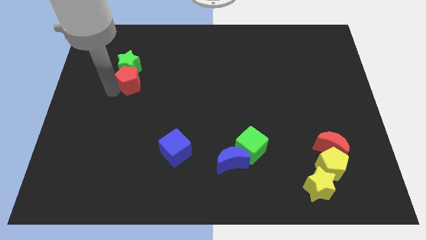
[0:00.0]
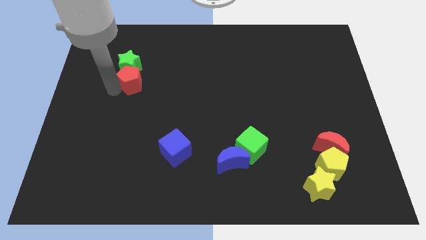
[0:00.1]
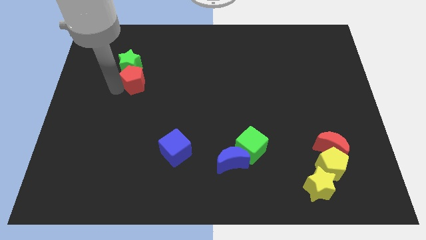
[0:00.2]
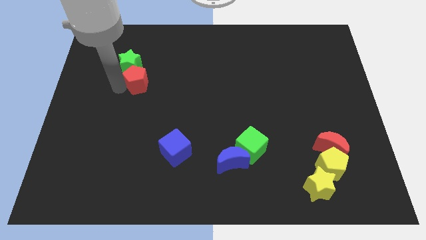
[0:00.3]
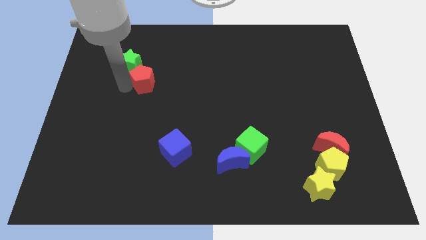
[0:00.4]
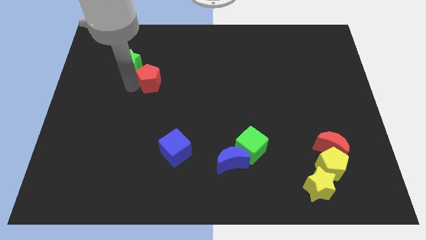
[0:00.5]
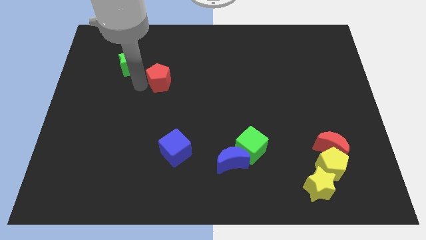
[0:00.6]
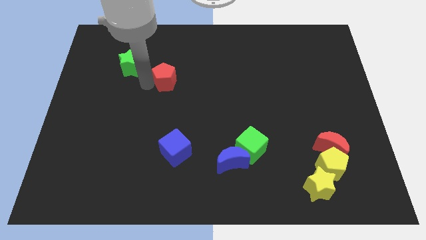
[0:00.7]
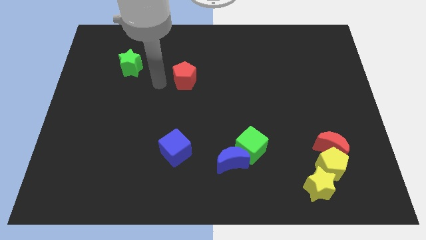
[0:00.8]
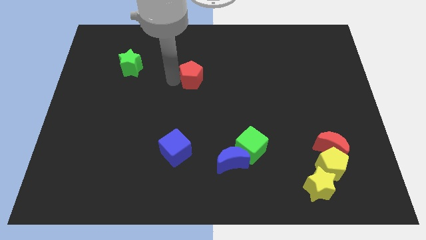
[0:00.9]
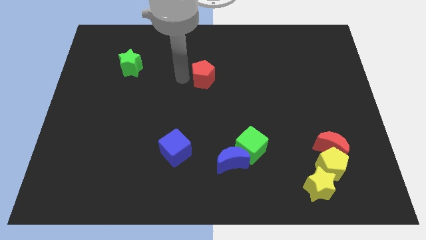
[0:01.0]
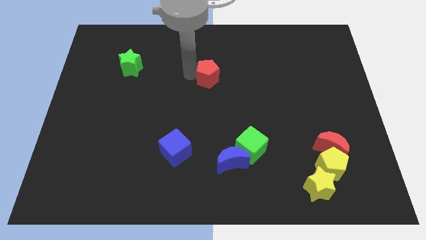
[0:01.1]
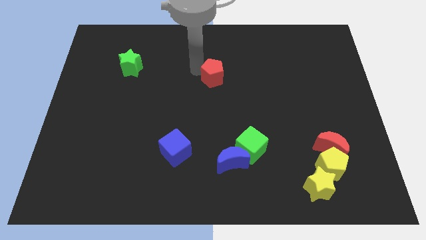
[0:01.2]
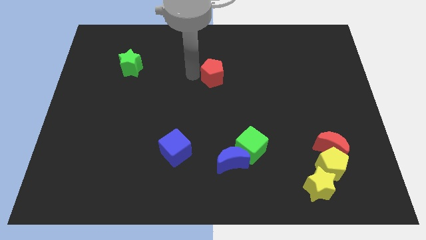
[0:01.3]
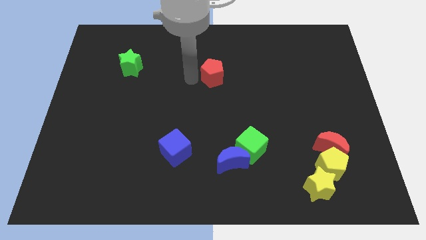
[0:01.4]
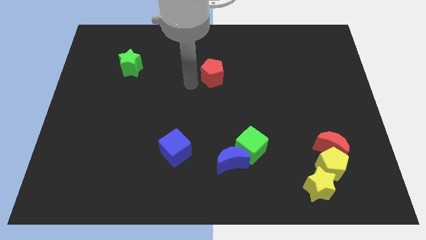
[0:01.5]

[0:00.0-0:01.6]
place the red pentagon to the center of the board

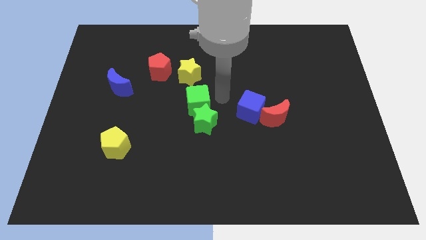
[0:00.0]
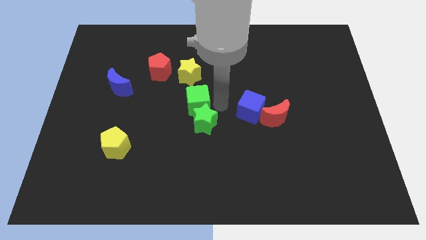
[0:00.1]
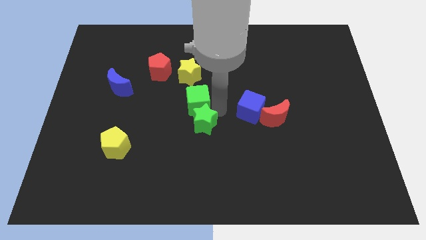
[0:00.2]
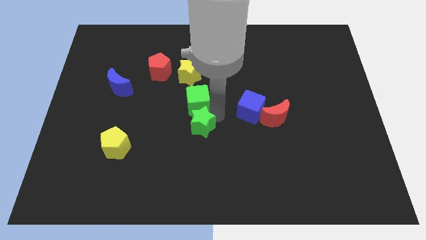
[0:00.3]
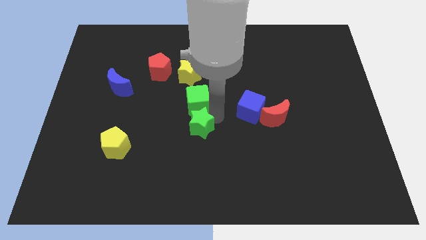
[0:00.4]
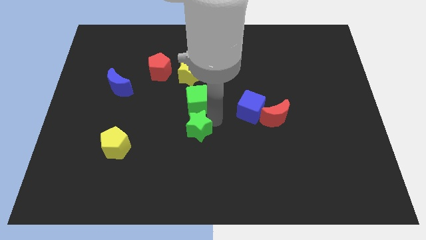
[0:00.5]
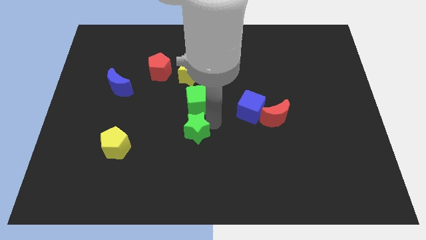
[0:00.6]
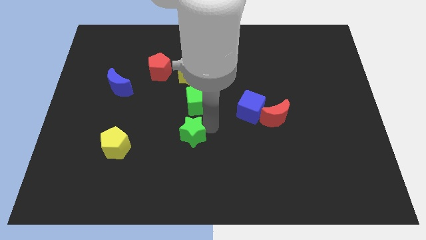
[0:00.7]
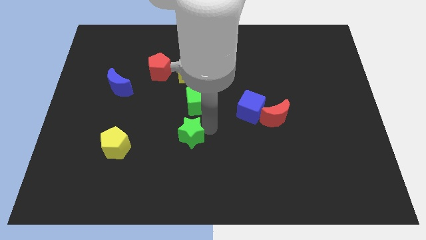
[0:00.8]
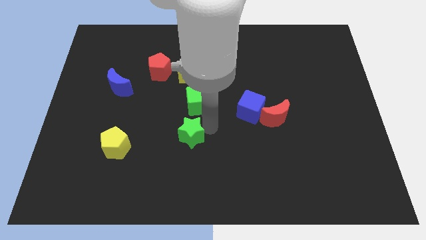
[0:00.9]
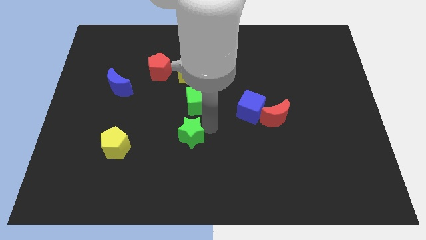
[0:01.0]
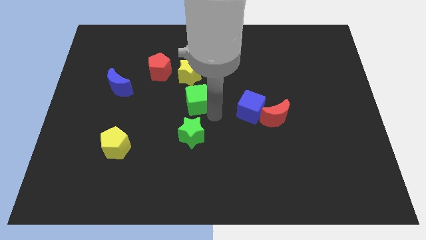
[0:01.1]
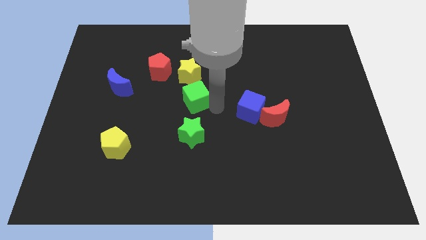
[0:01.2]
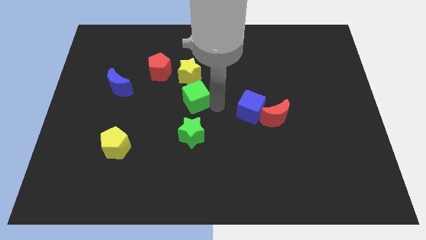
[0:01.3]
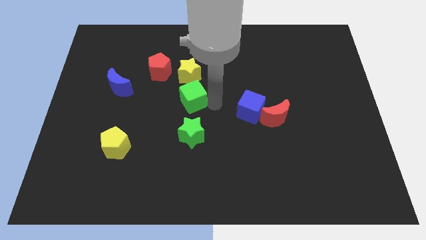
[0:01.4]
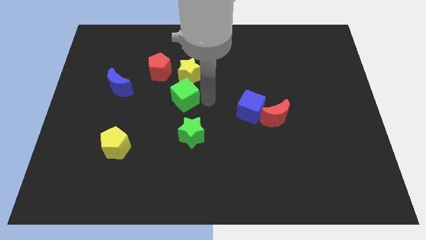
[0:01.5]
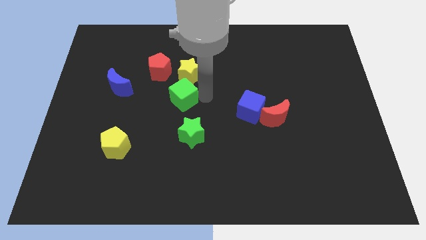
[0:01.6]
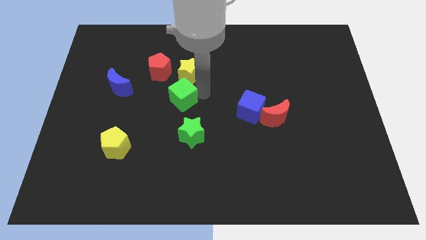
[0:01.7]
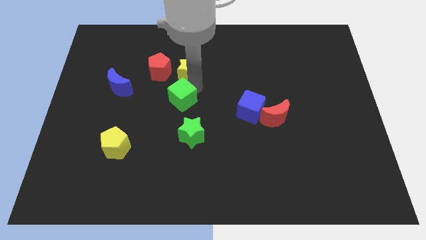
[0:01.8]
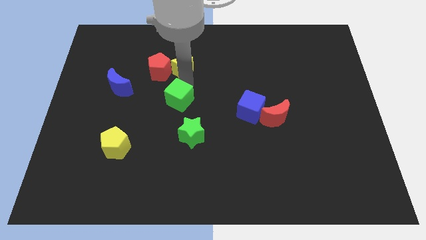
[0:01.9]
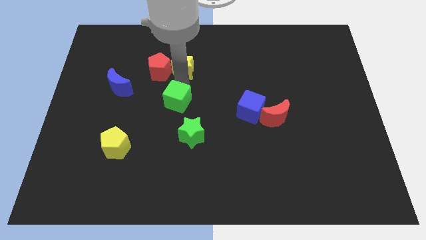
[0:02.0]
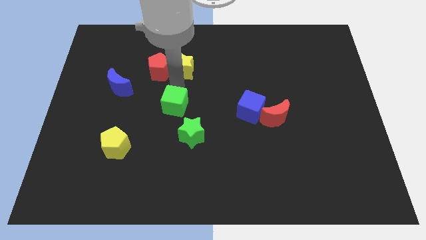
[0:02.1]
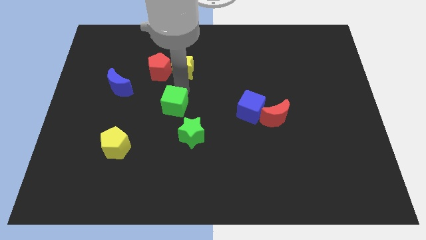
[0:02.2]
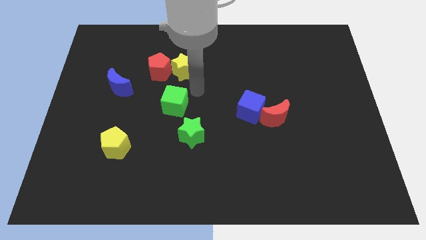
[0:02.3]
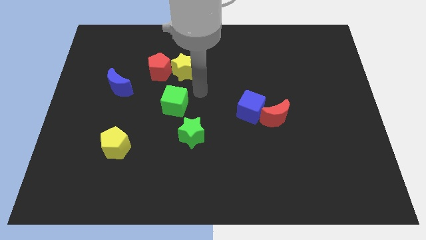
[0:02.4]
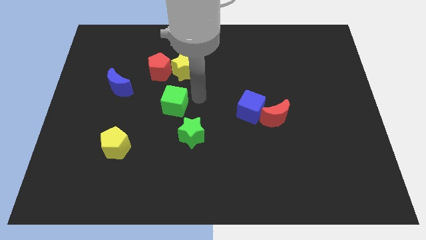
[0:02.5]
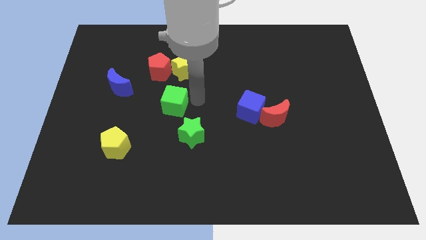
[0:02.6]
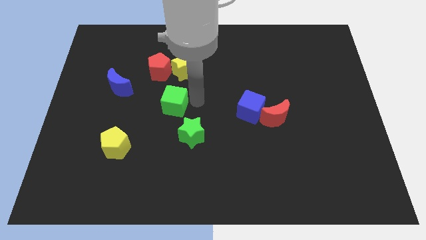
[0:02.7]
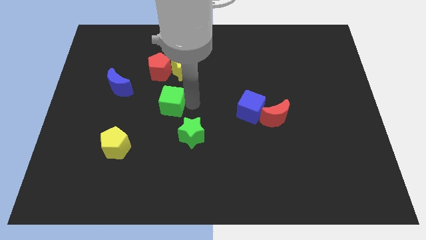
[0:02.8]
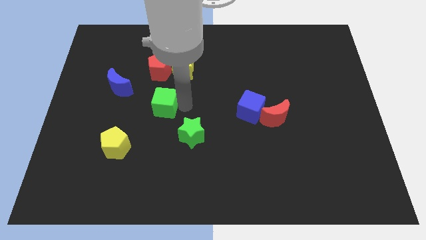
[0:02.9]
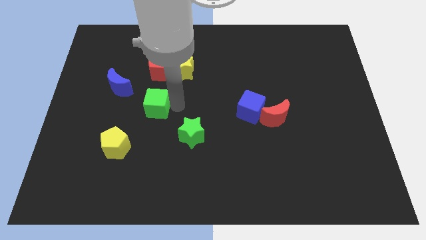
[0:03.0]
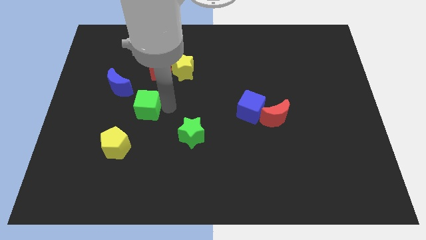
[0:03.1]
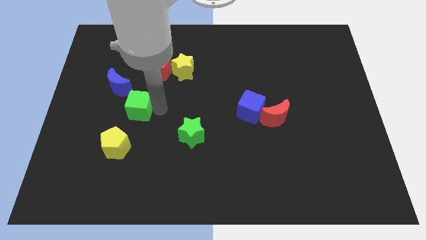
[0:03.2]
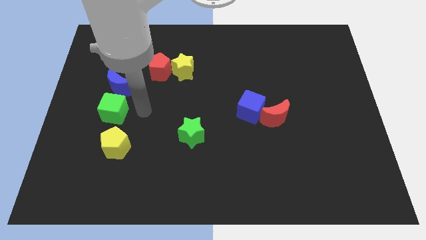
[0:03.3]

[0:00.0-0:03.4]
slide the green cube diagonally top left to the green star

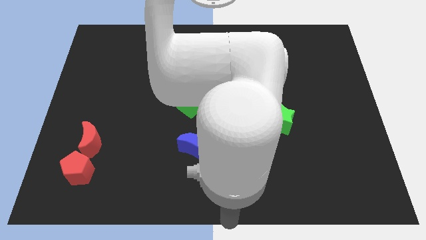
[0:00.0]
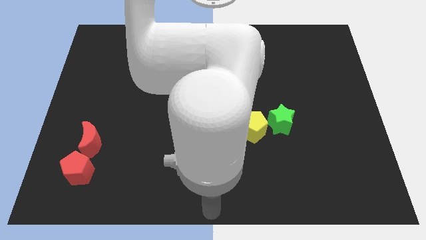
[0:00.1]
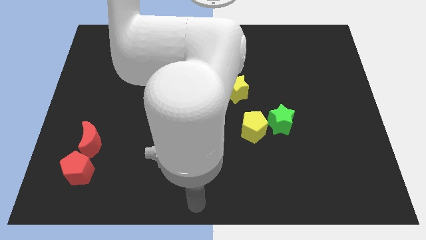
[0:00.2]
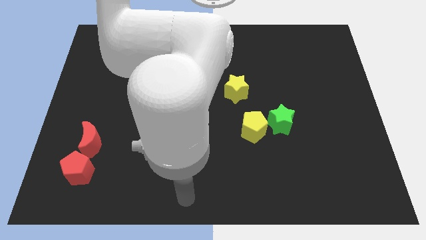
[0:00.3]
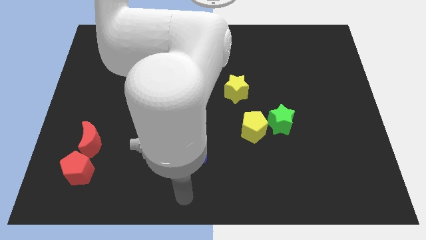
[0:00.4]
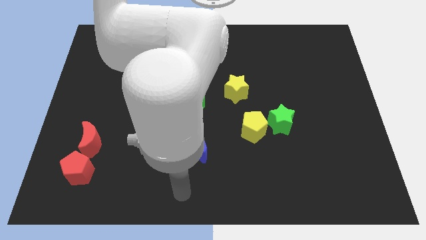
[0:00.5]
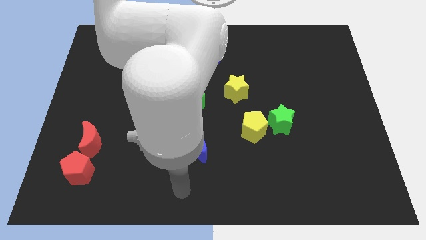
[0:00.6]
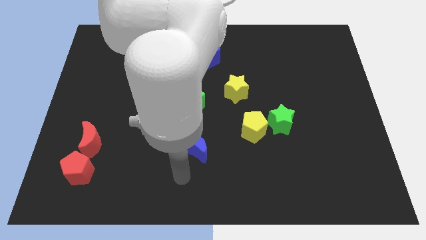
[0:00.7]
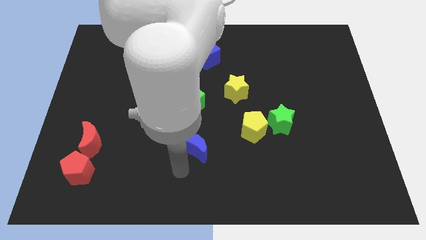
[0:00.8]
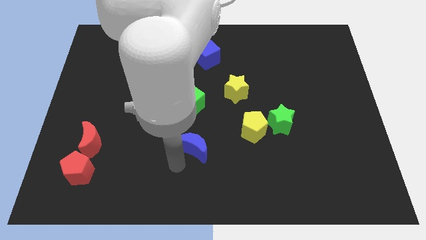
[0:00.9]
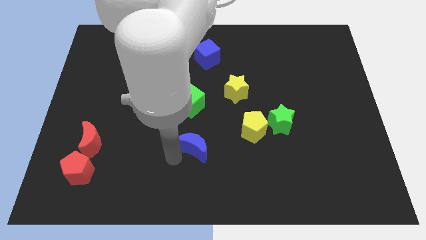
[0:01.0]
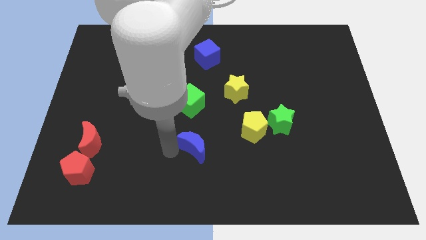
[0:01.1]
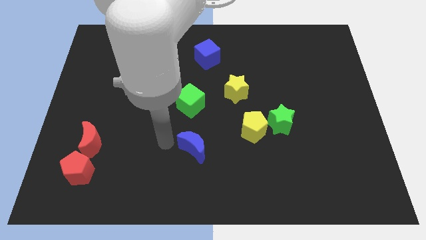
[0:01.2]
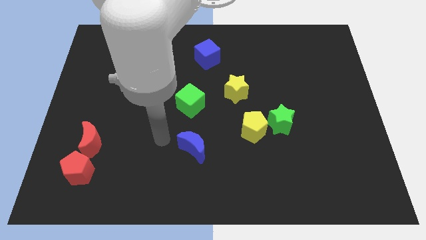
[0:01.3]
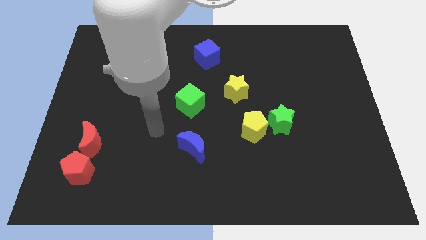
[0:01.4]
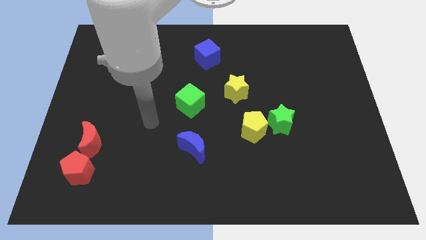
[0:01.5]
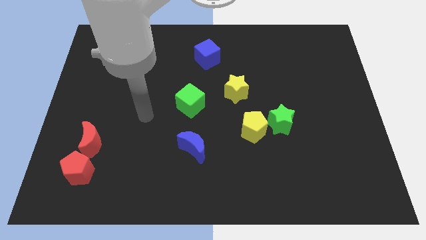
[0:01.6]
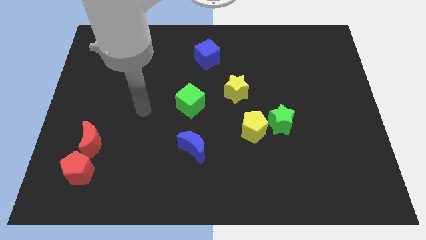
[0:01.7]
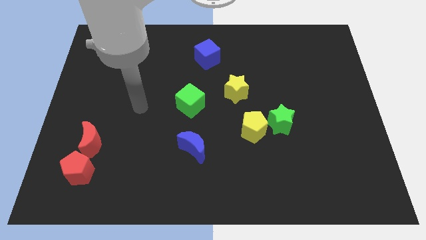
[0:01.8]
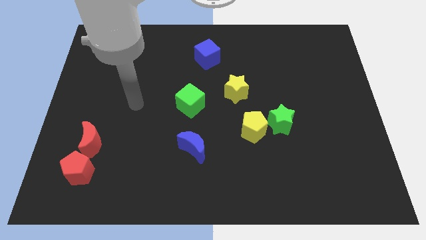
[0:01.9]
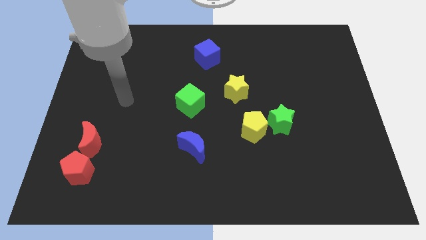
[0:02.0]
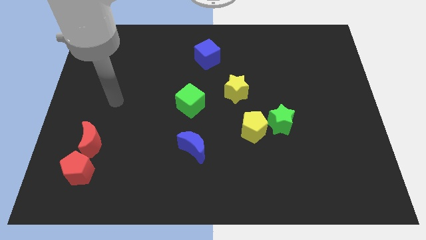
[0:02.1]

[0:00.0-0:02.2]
place your arm at the left of the green cube

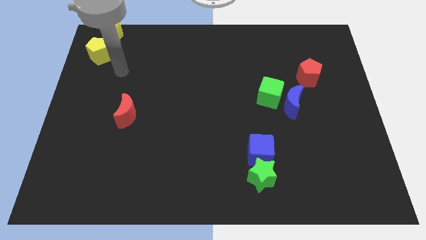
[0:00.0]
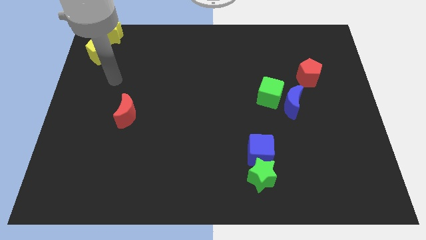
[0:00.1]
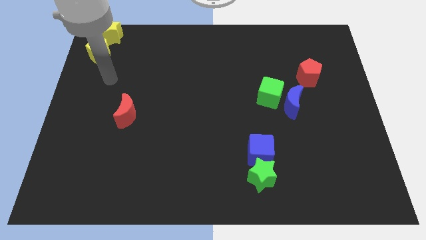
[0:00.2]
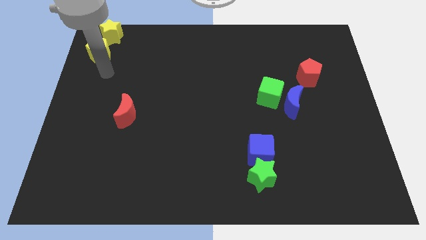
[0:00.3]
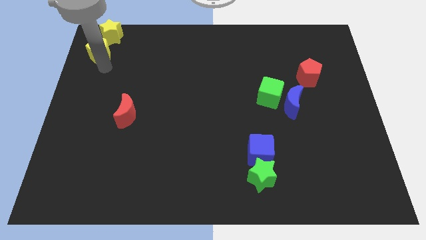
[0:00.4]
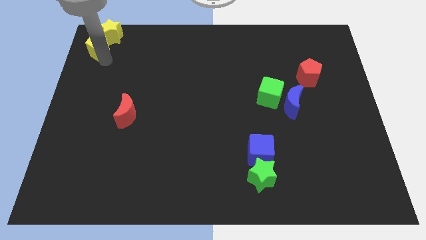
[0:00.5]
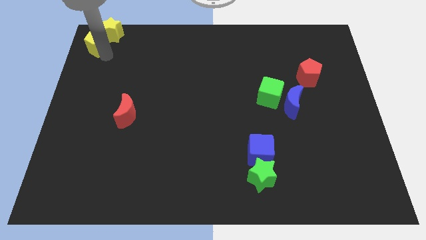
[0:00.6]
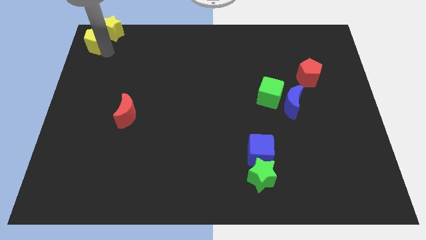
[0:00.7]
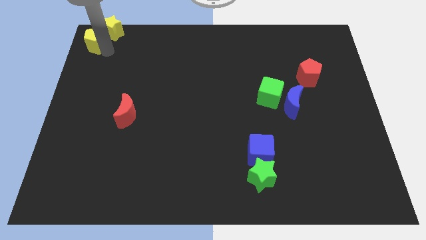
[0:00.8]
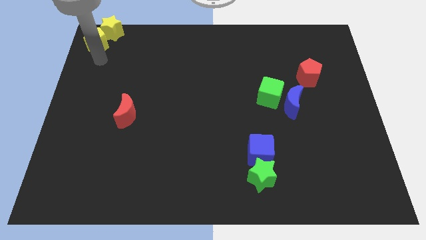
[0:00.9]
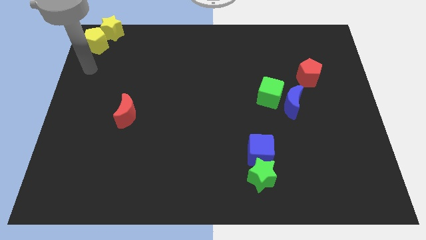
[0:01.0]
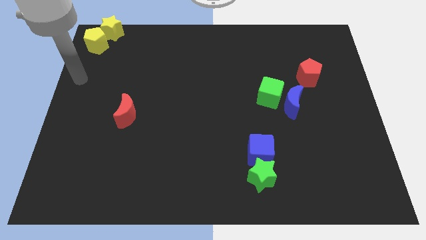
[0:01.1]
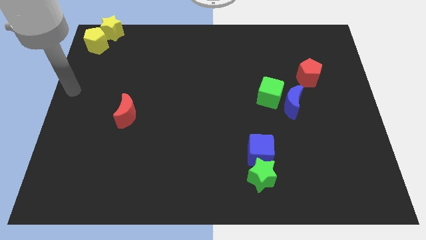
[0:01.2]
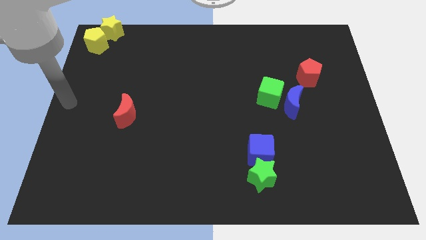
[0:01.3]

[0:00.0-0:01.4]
push the yellow pentagon into the yellow star

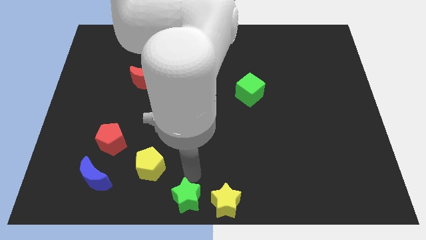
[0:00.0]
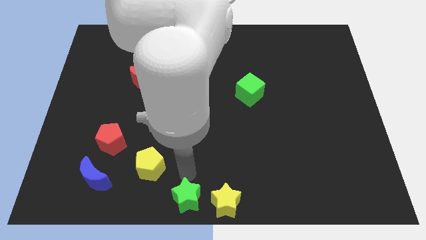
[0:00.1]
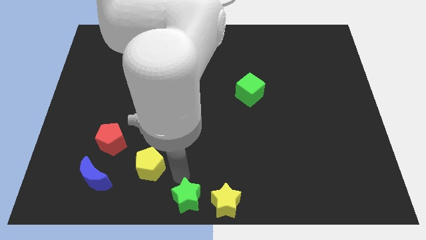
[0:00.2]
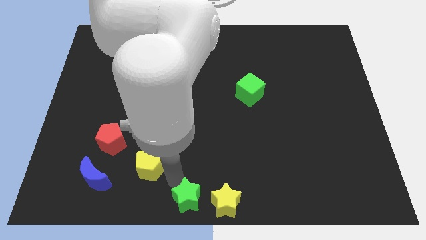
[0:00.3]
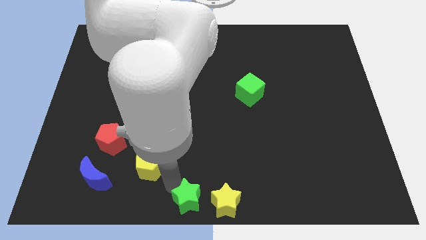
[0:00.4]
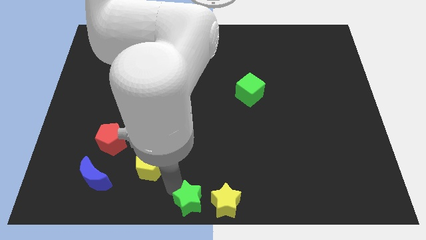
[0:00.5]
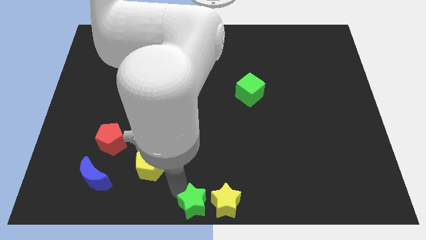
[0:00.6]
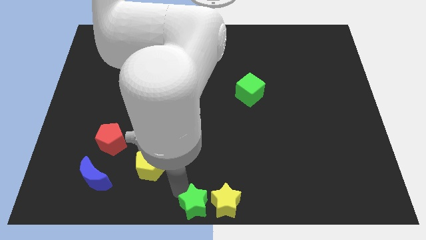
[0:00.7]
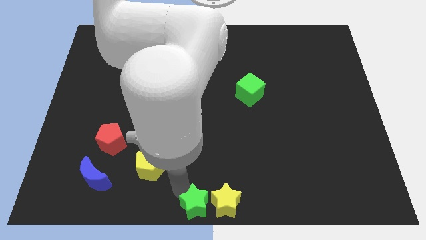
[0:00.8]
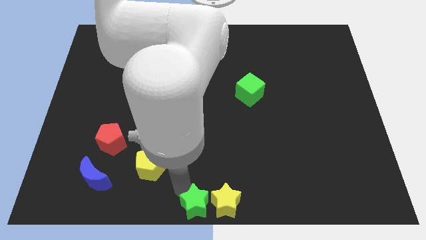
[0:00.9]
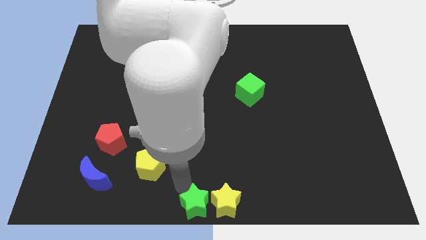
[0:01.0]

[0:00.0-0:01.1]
move the green star to the left of the yellow star
